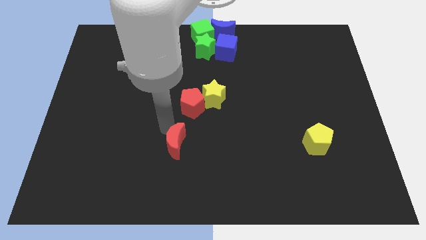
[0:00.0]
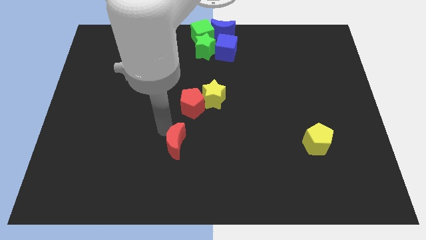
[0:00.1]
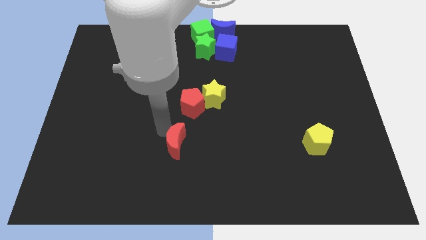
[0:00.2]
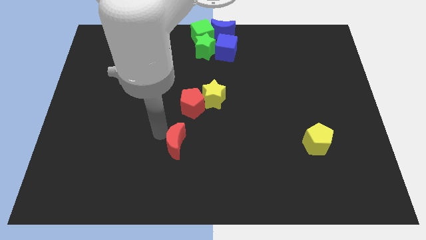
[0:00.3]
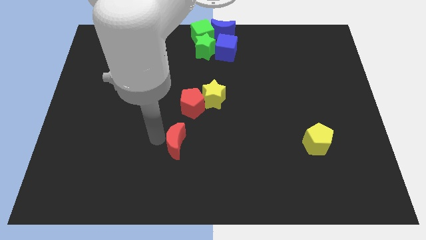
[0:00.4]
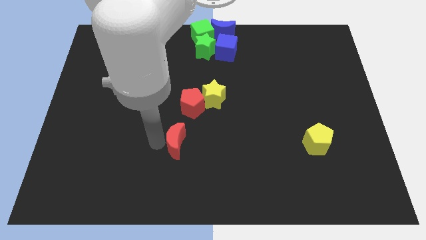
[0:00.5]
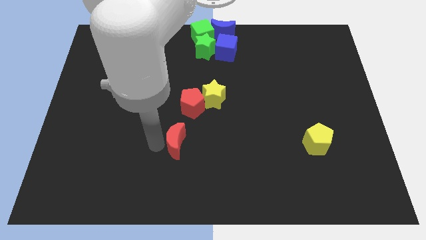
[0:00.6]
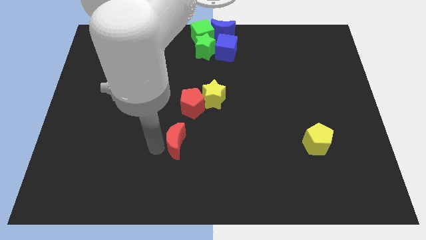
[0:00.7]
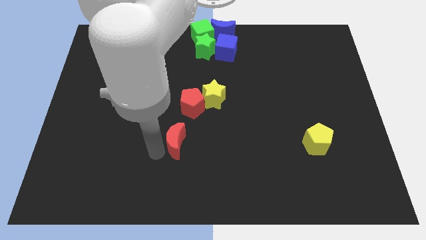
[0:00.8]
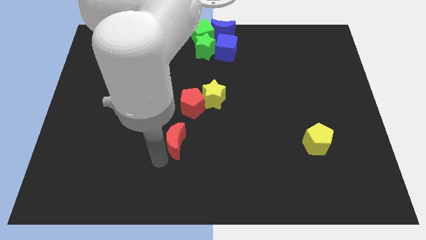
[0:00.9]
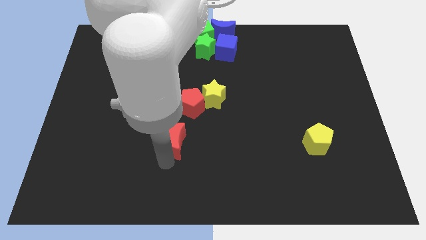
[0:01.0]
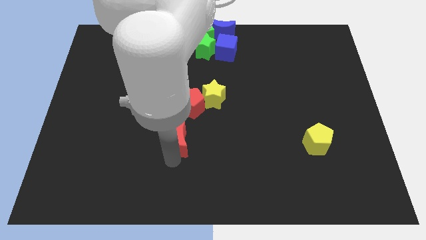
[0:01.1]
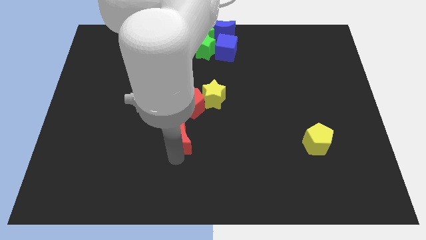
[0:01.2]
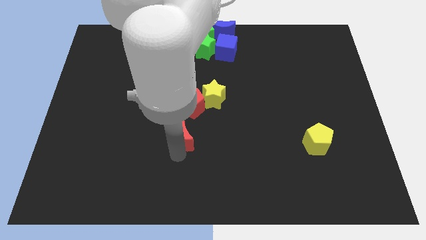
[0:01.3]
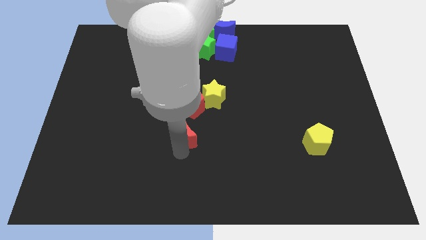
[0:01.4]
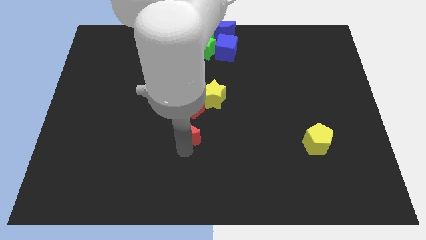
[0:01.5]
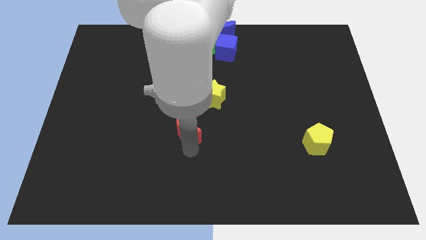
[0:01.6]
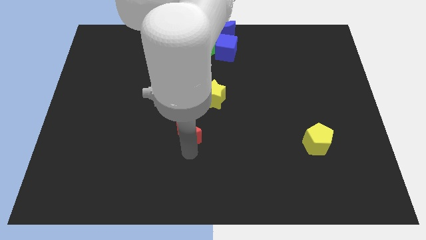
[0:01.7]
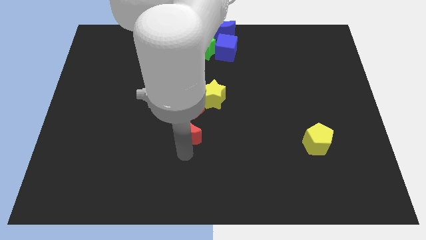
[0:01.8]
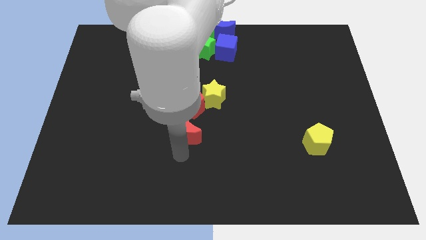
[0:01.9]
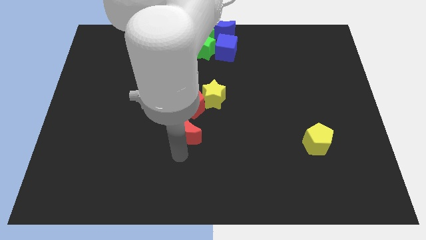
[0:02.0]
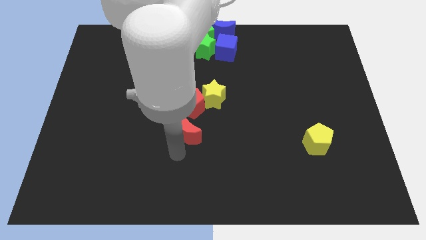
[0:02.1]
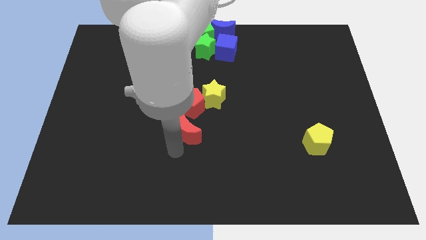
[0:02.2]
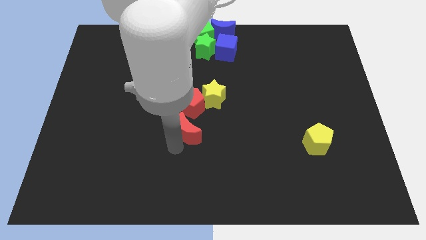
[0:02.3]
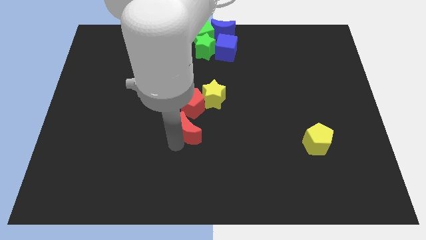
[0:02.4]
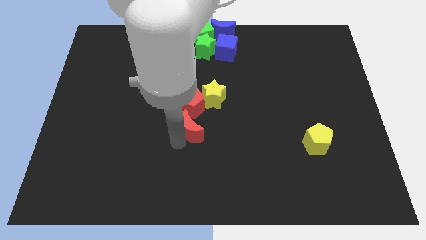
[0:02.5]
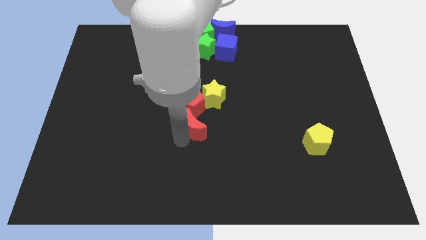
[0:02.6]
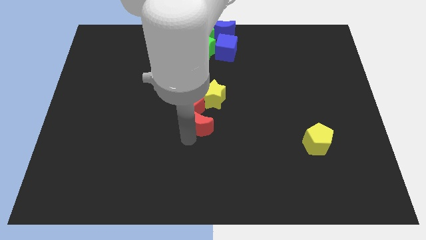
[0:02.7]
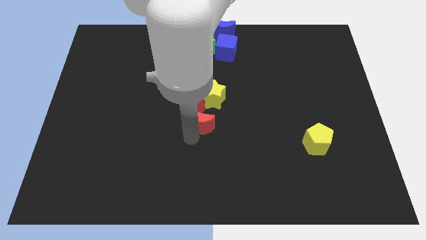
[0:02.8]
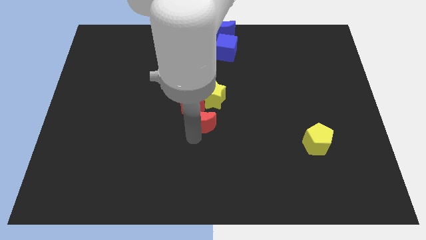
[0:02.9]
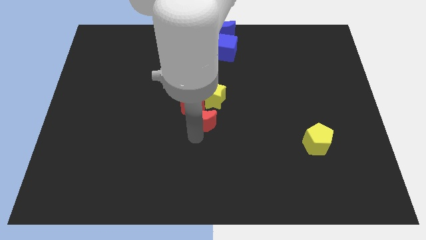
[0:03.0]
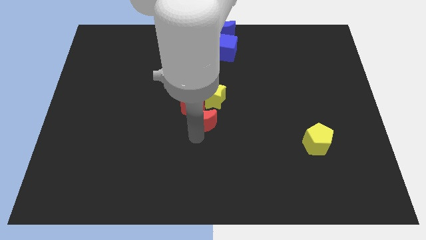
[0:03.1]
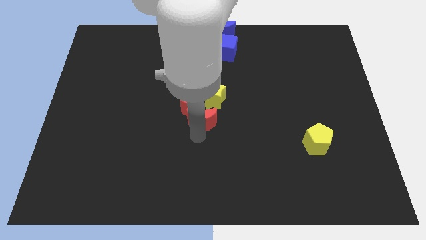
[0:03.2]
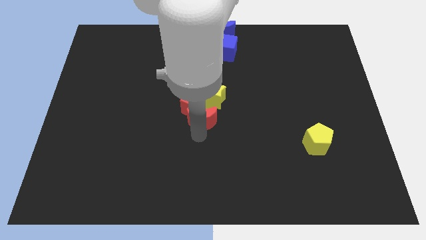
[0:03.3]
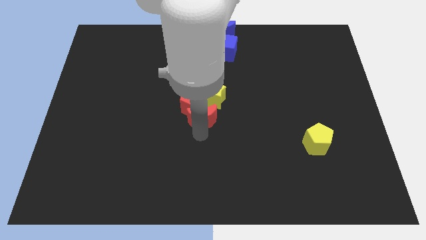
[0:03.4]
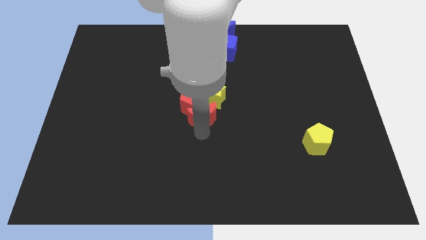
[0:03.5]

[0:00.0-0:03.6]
push the red crescent to the bottom of the yellow star

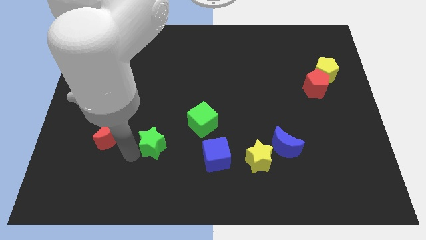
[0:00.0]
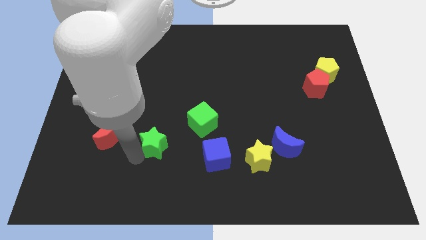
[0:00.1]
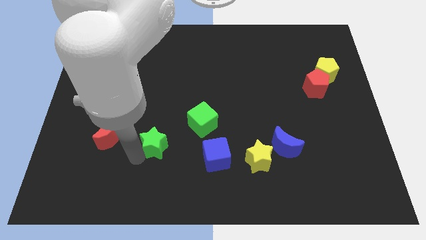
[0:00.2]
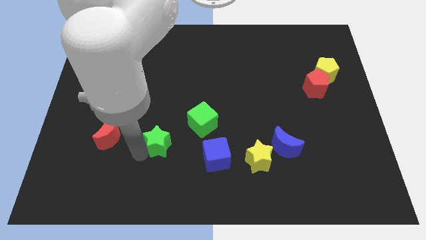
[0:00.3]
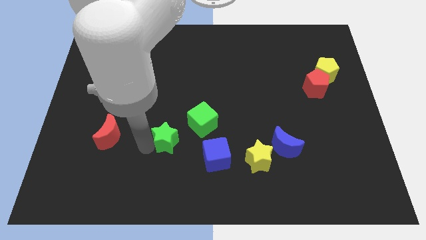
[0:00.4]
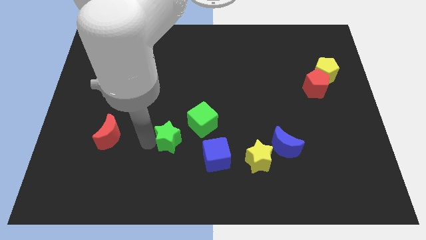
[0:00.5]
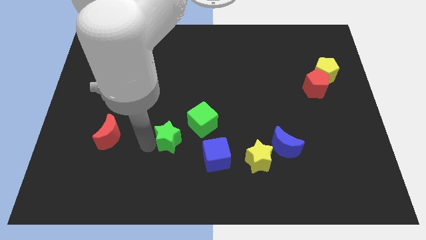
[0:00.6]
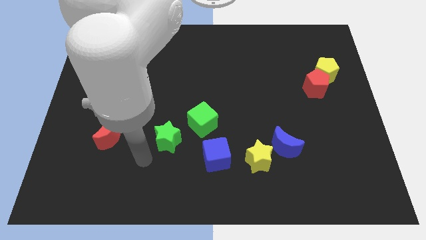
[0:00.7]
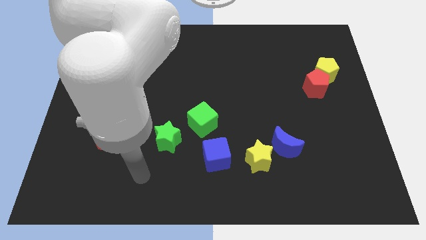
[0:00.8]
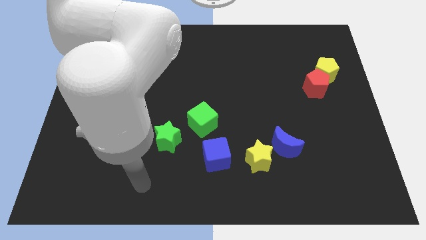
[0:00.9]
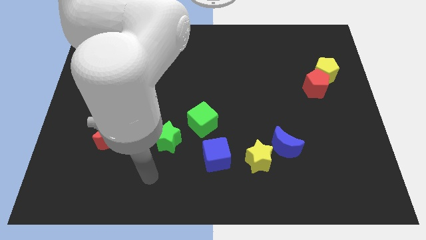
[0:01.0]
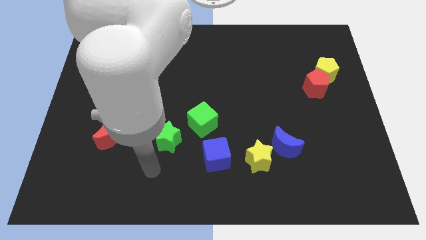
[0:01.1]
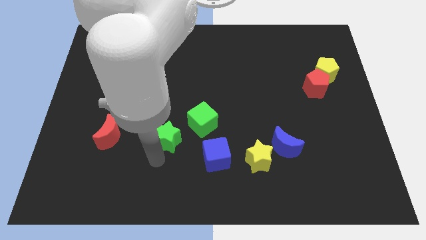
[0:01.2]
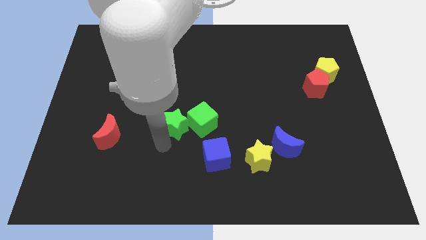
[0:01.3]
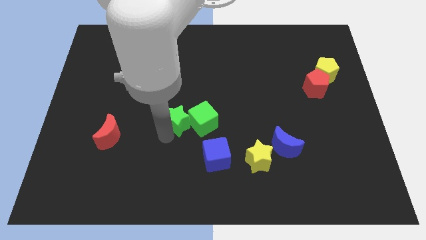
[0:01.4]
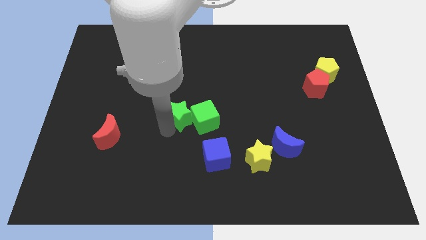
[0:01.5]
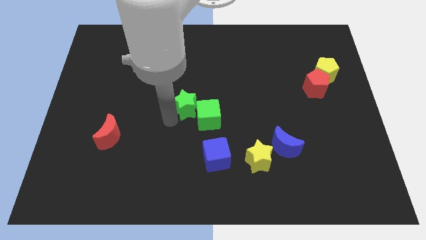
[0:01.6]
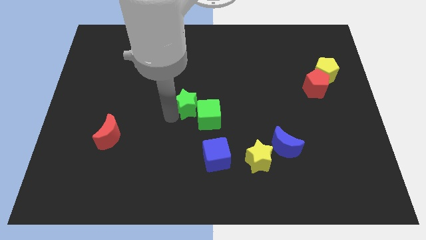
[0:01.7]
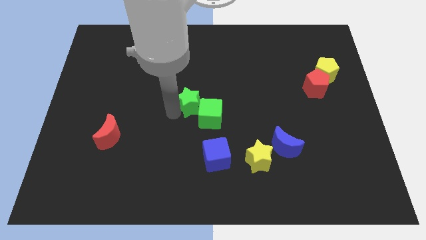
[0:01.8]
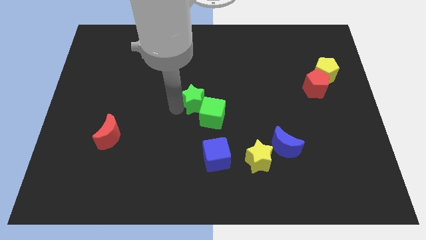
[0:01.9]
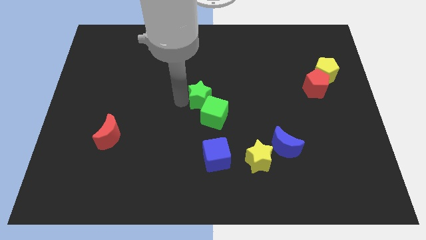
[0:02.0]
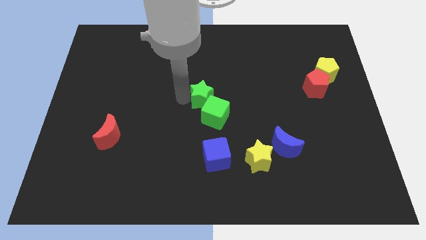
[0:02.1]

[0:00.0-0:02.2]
push the green star into the green cube

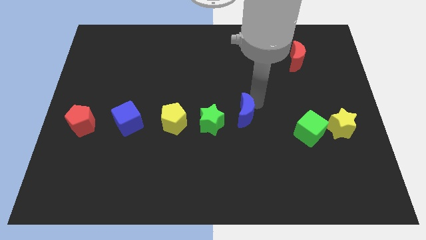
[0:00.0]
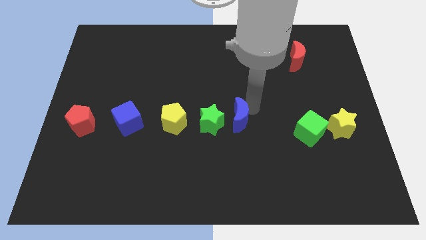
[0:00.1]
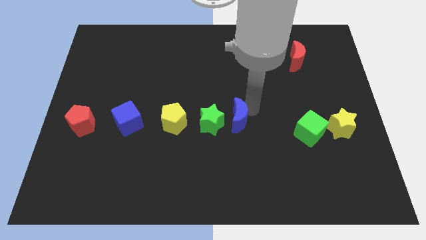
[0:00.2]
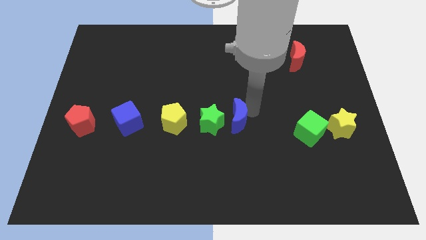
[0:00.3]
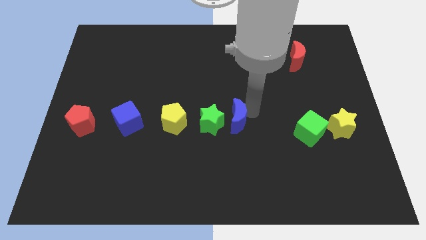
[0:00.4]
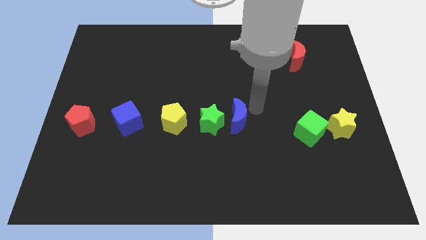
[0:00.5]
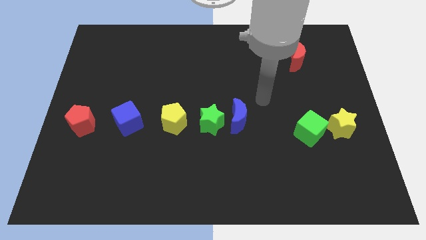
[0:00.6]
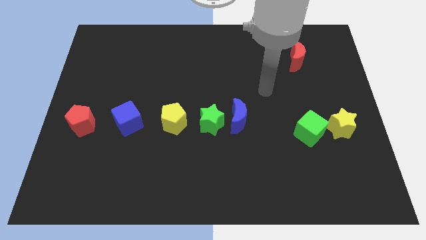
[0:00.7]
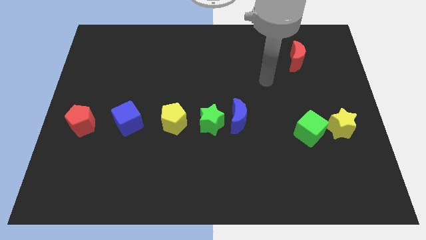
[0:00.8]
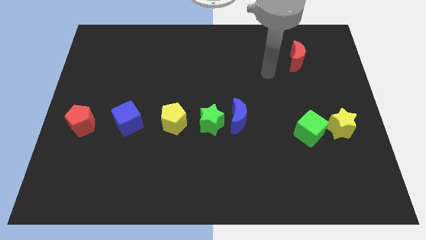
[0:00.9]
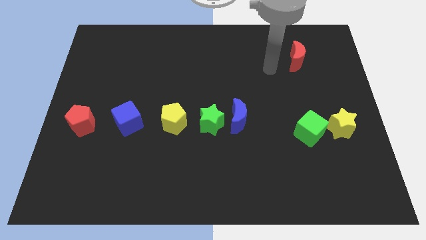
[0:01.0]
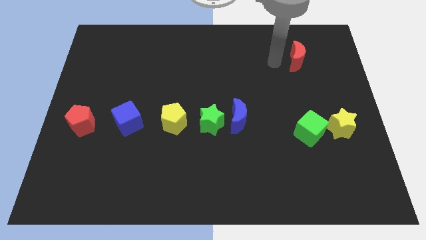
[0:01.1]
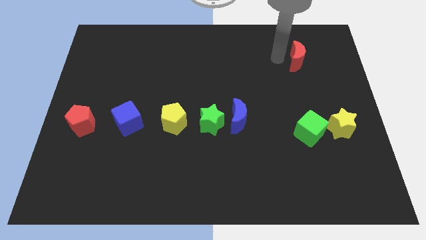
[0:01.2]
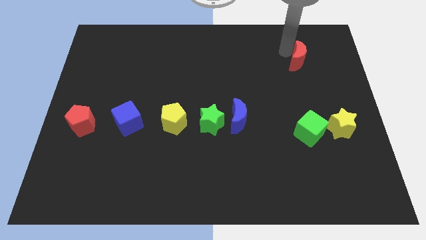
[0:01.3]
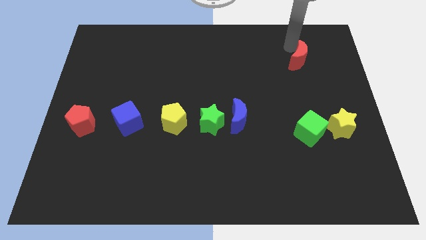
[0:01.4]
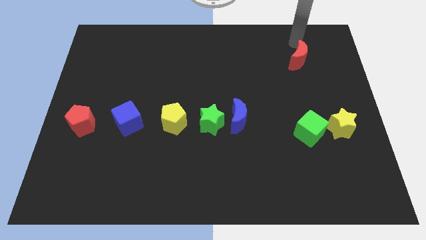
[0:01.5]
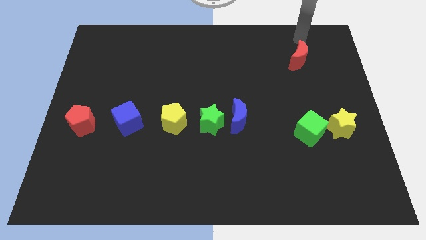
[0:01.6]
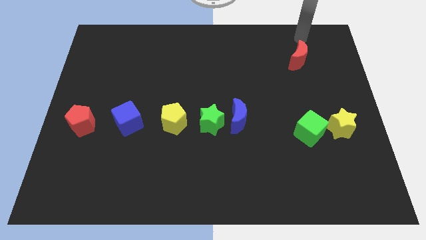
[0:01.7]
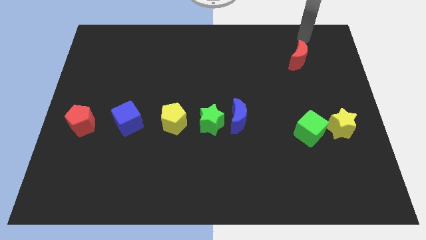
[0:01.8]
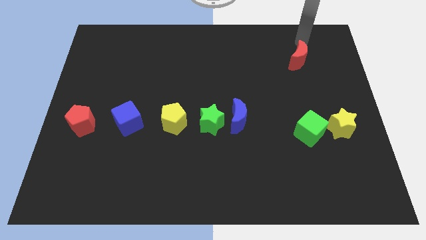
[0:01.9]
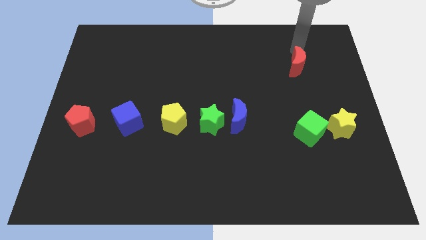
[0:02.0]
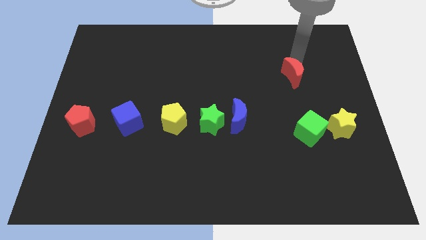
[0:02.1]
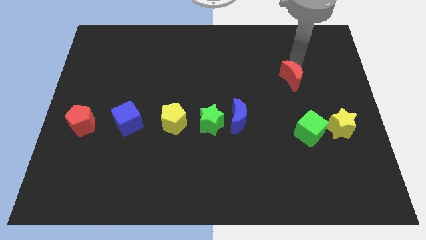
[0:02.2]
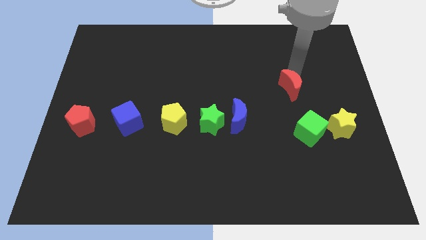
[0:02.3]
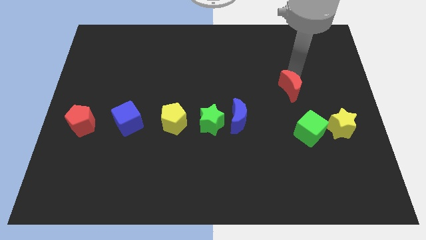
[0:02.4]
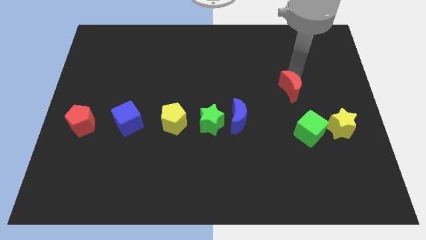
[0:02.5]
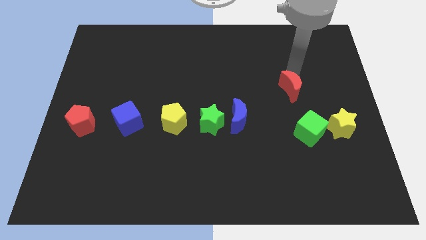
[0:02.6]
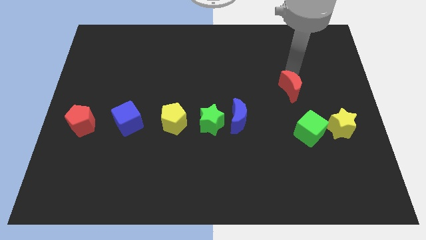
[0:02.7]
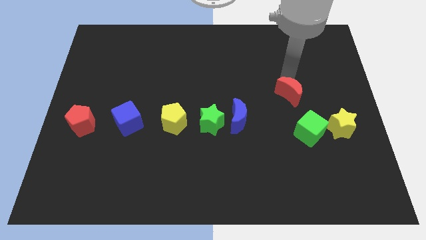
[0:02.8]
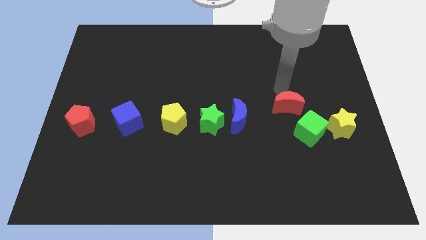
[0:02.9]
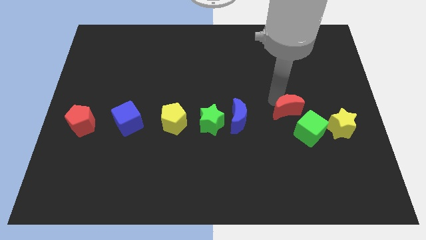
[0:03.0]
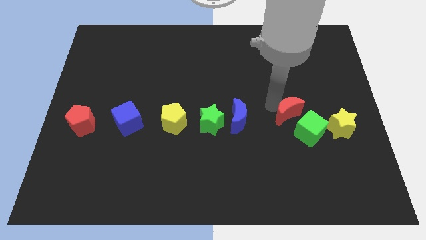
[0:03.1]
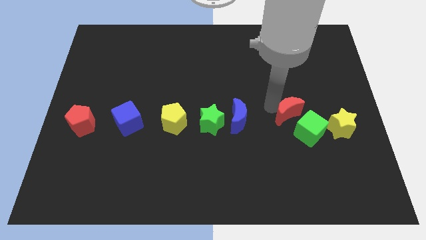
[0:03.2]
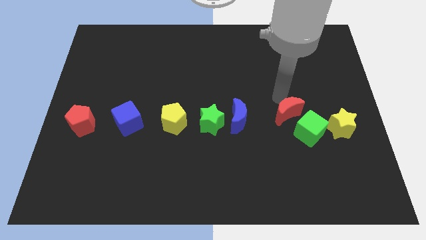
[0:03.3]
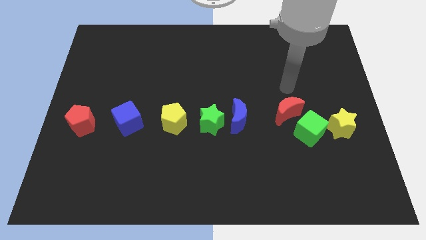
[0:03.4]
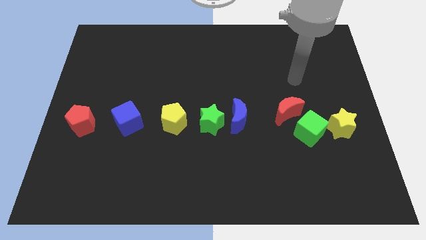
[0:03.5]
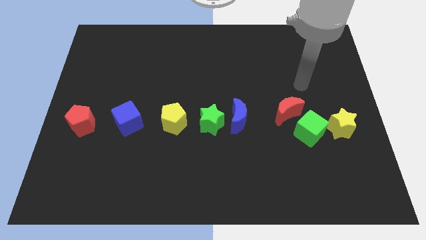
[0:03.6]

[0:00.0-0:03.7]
push the top of blue and red moon to the center
